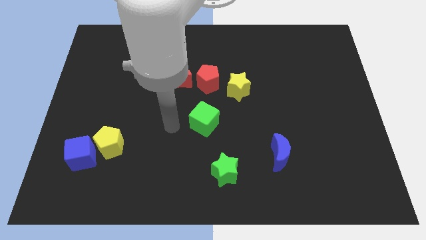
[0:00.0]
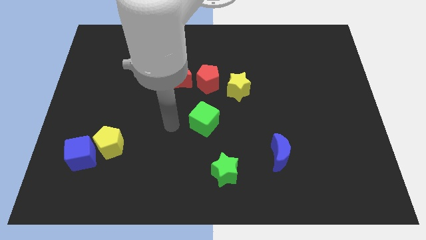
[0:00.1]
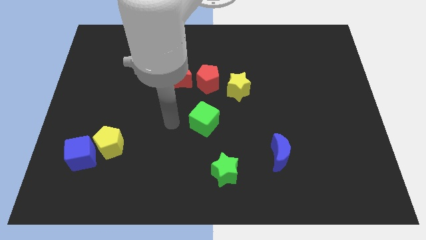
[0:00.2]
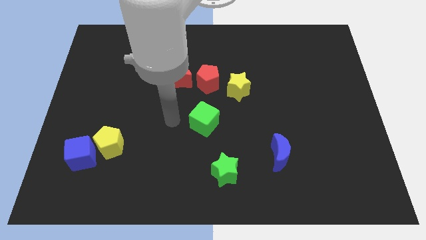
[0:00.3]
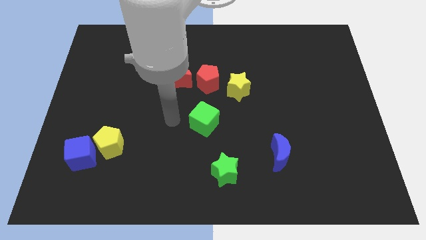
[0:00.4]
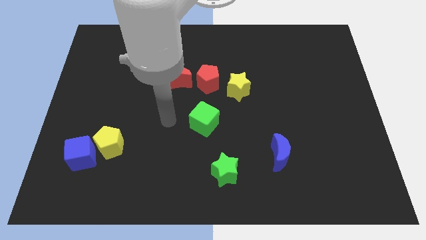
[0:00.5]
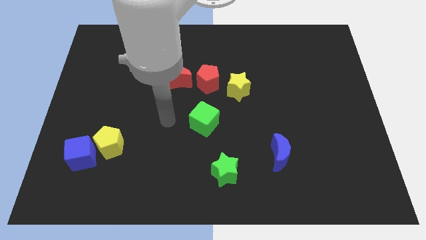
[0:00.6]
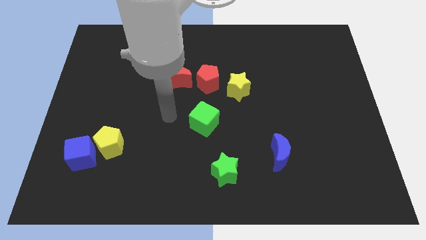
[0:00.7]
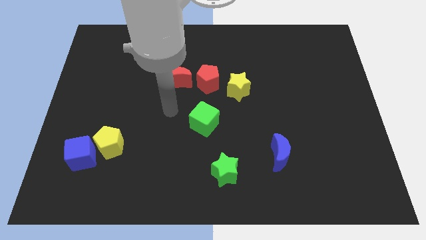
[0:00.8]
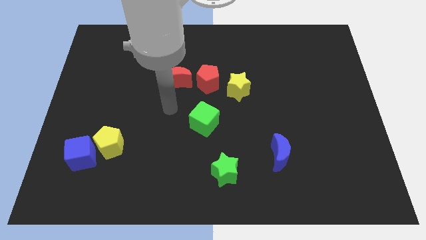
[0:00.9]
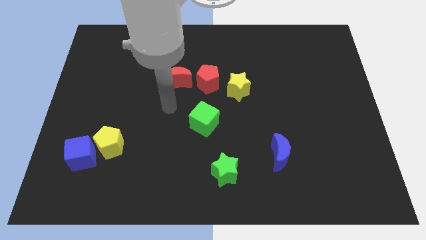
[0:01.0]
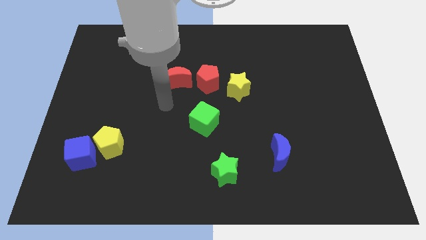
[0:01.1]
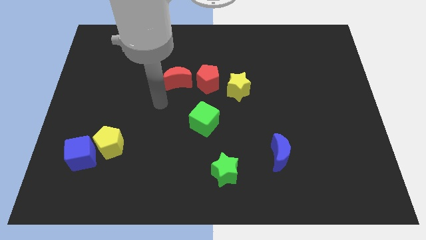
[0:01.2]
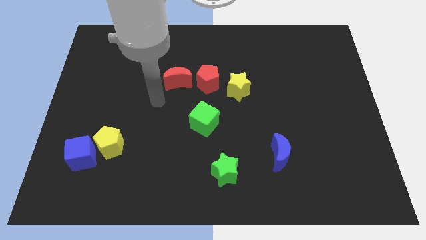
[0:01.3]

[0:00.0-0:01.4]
place your arm to the left of red moon

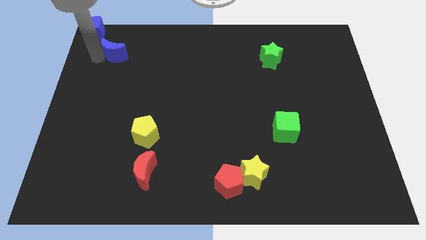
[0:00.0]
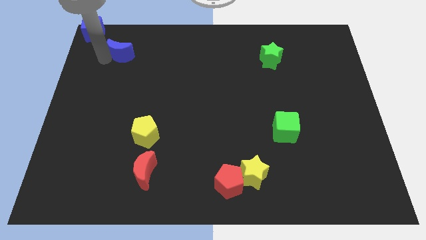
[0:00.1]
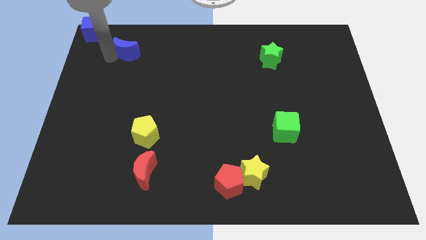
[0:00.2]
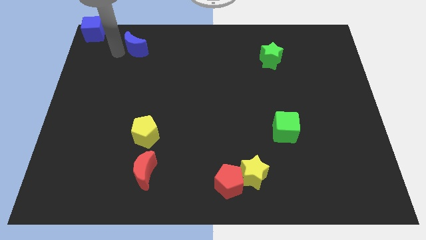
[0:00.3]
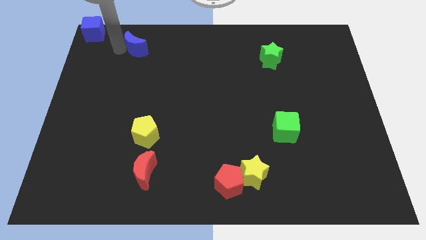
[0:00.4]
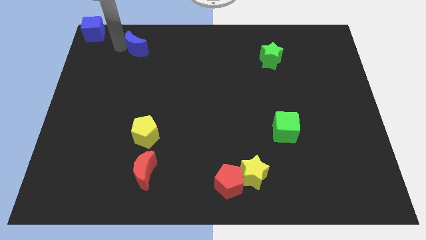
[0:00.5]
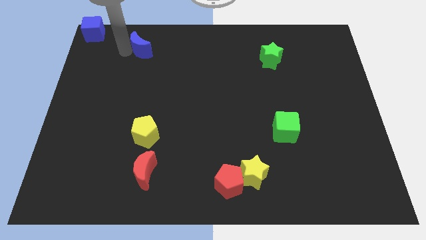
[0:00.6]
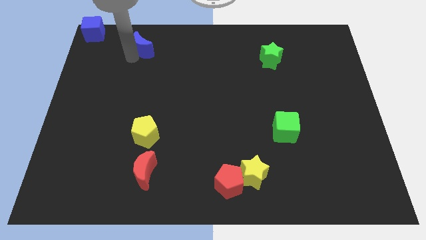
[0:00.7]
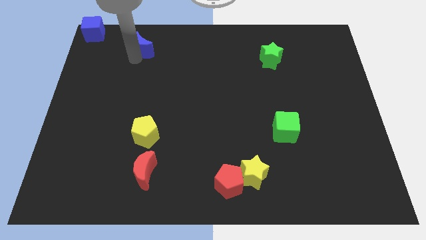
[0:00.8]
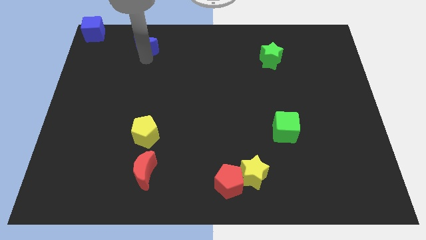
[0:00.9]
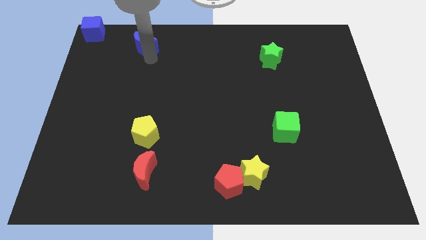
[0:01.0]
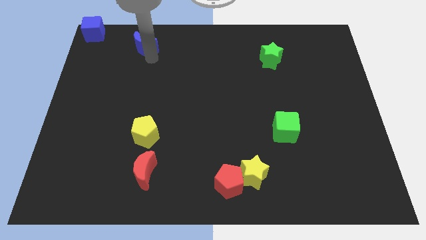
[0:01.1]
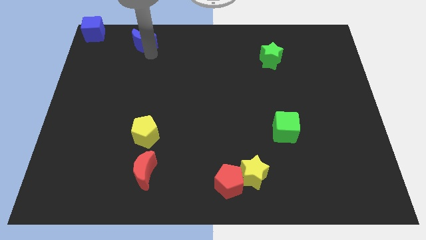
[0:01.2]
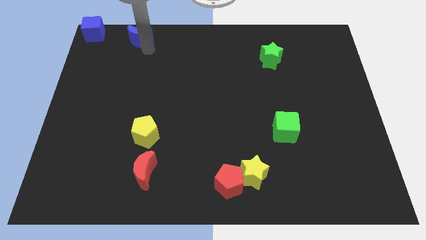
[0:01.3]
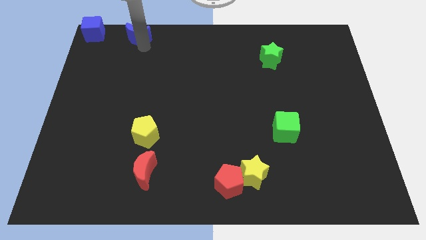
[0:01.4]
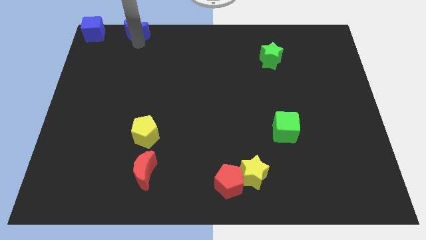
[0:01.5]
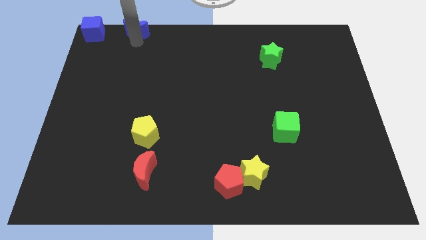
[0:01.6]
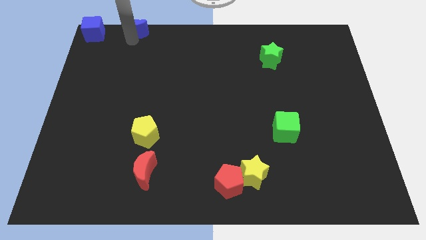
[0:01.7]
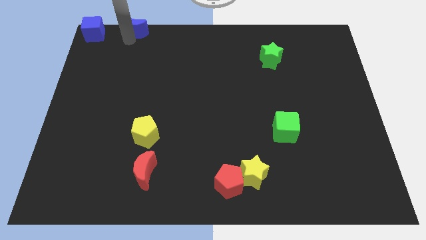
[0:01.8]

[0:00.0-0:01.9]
slide the blue moon to the right of the blue cube

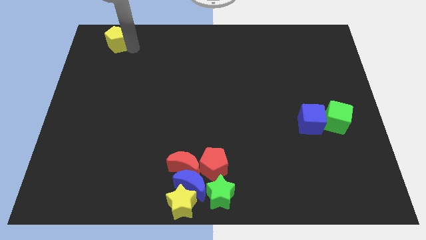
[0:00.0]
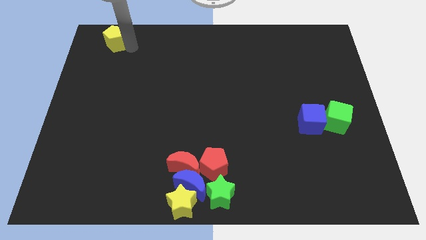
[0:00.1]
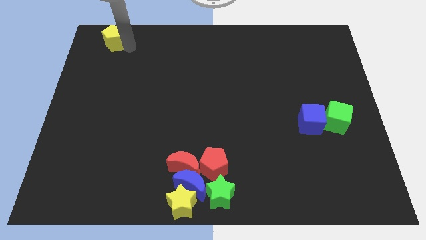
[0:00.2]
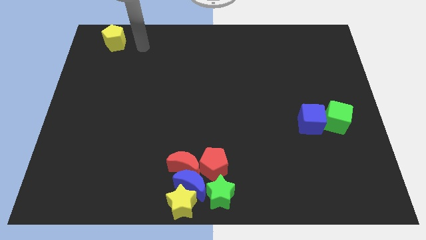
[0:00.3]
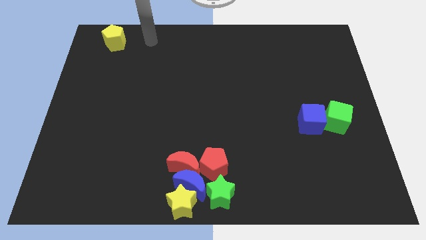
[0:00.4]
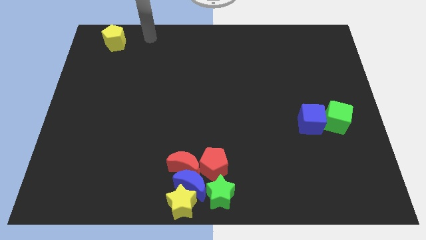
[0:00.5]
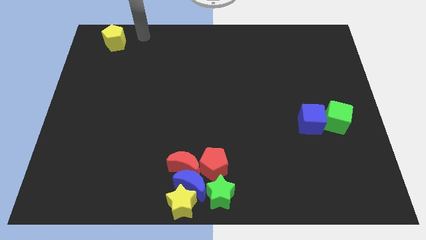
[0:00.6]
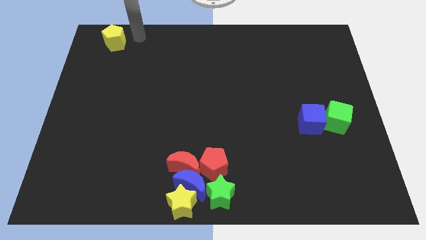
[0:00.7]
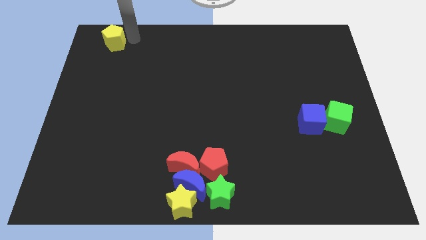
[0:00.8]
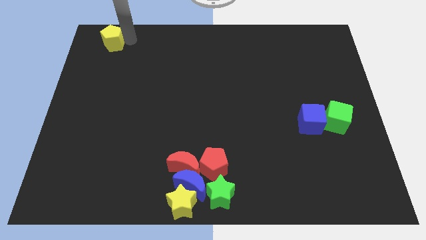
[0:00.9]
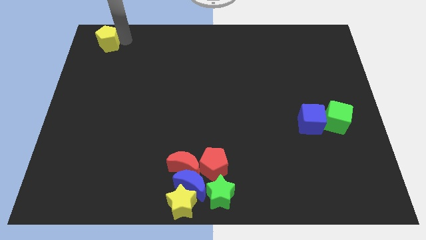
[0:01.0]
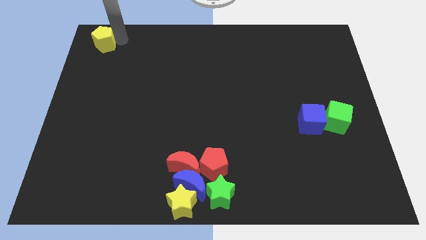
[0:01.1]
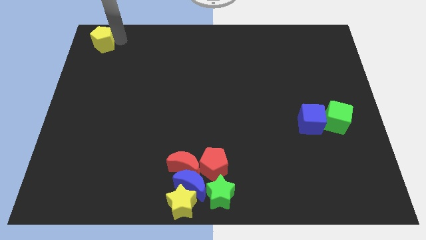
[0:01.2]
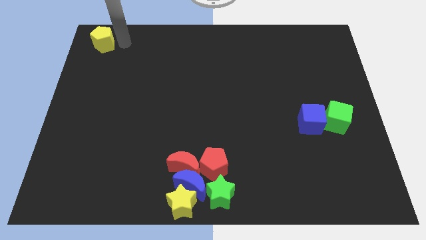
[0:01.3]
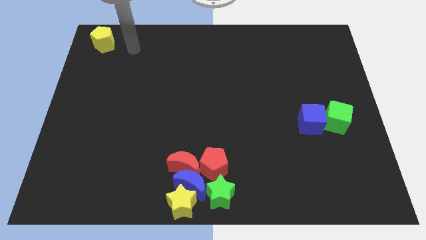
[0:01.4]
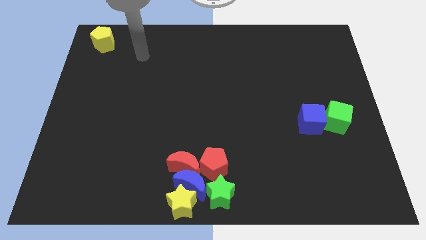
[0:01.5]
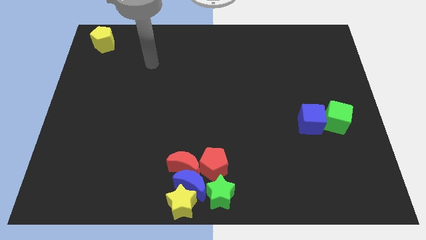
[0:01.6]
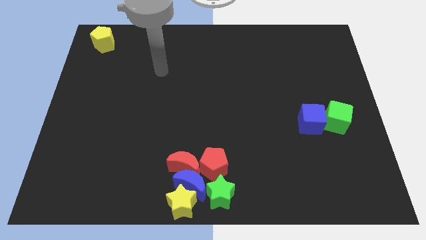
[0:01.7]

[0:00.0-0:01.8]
move the yellow pentagon to the top left corner of the board

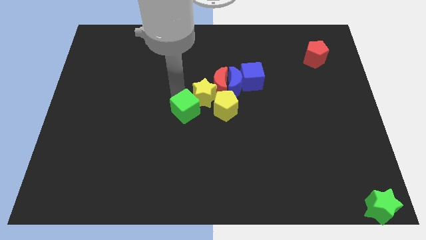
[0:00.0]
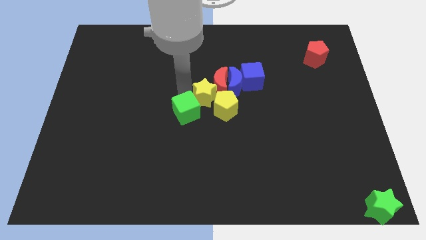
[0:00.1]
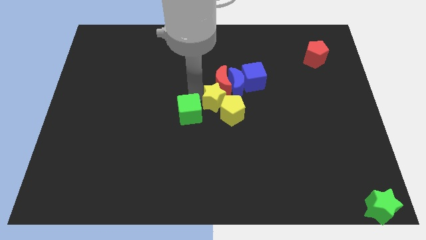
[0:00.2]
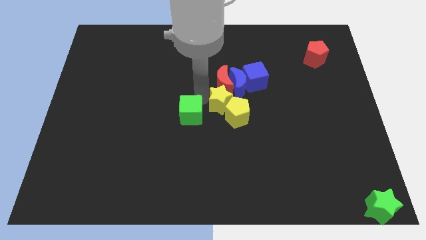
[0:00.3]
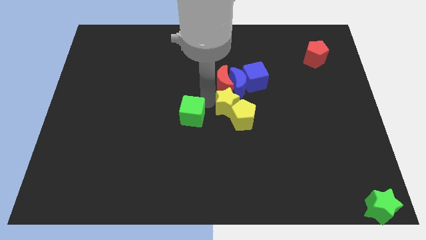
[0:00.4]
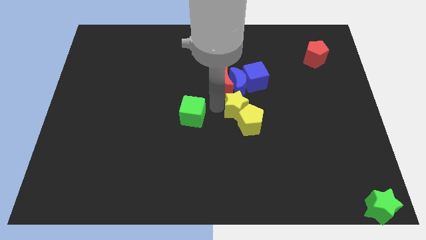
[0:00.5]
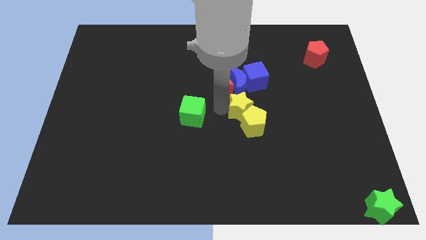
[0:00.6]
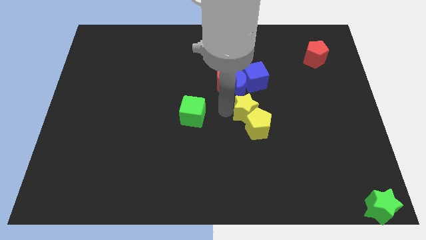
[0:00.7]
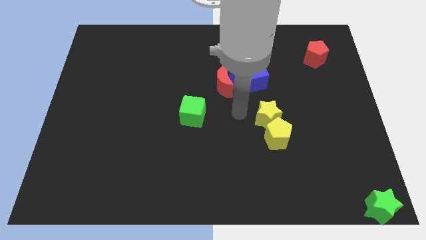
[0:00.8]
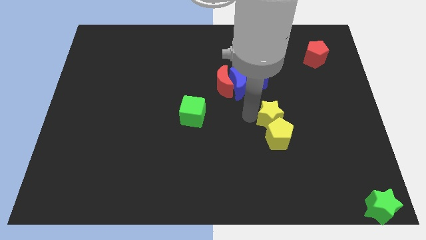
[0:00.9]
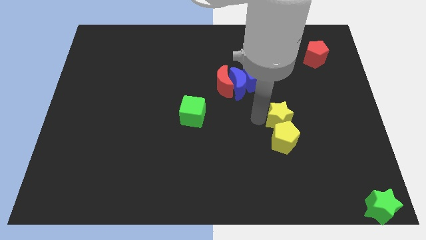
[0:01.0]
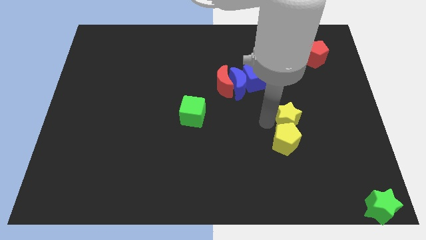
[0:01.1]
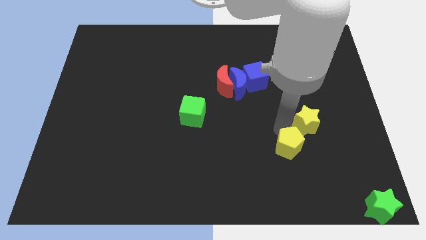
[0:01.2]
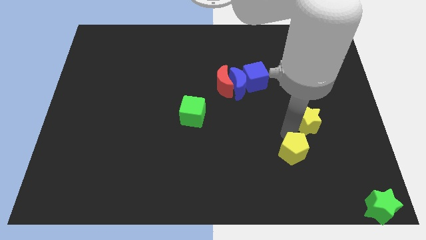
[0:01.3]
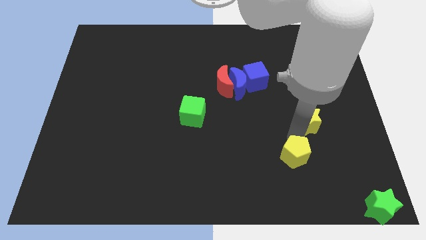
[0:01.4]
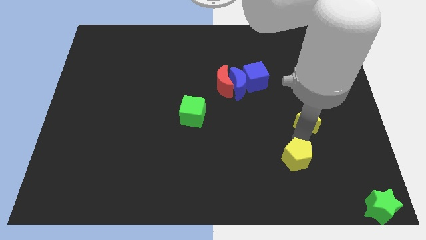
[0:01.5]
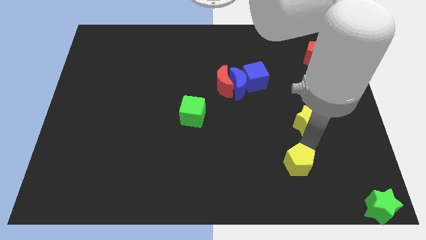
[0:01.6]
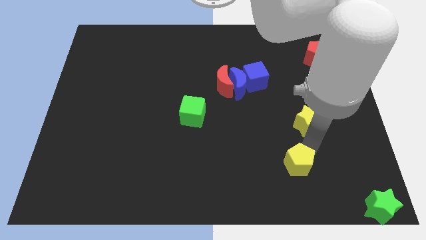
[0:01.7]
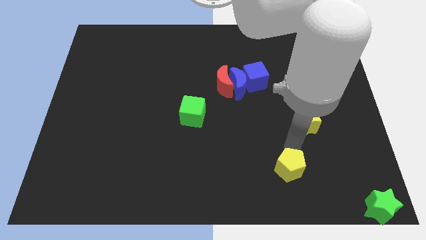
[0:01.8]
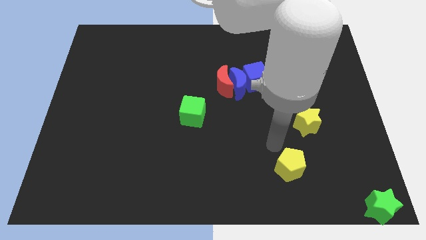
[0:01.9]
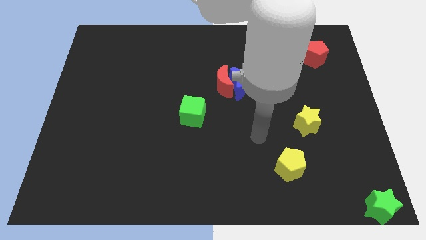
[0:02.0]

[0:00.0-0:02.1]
separate the group of yellow blocks

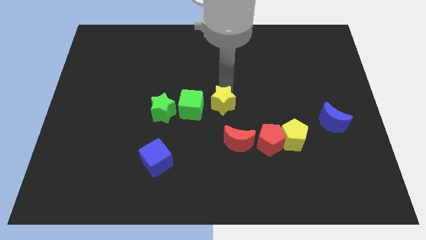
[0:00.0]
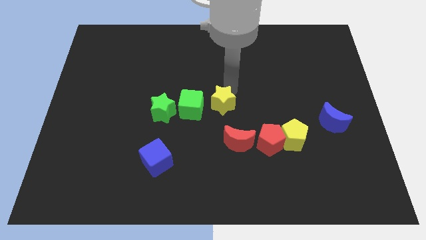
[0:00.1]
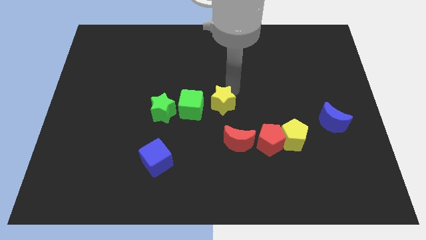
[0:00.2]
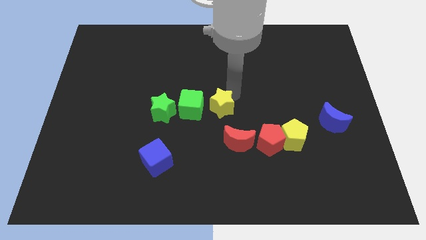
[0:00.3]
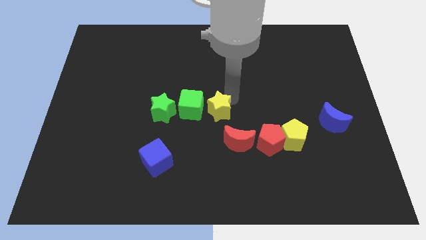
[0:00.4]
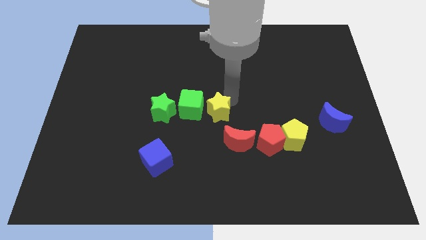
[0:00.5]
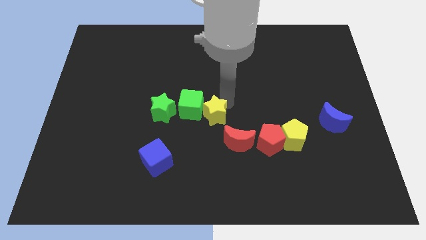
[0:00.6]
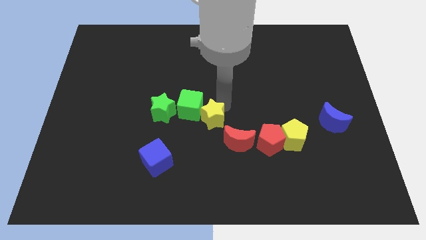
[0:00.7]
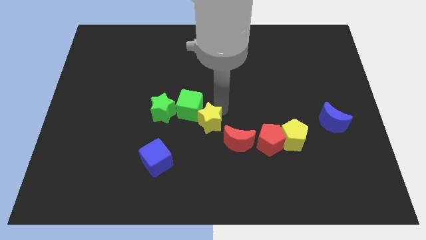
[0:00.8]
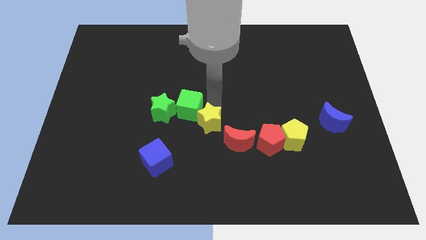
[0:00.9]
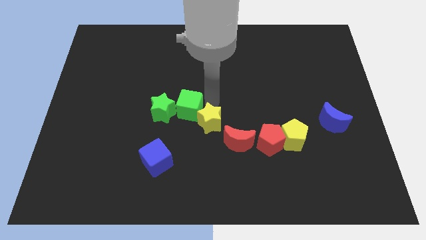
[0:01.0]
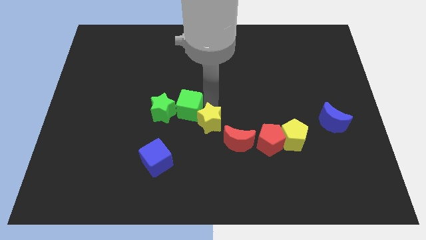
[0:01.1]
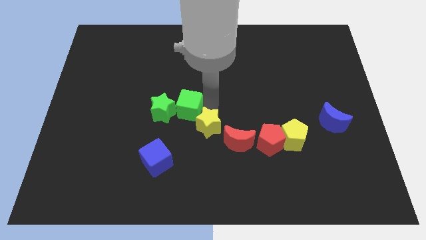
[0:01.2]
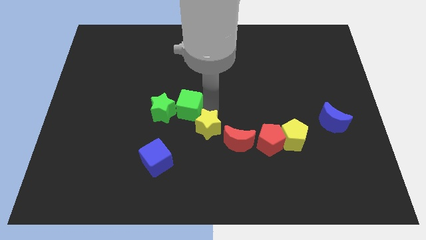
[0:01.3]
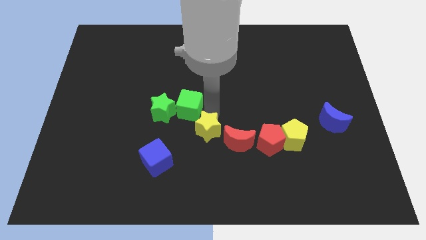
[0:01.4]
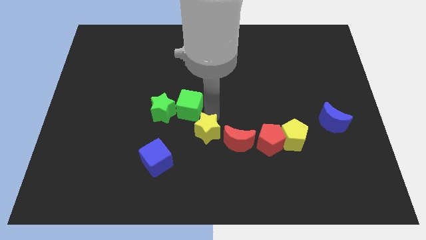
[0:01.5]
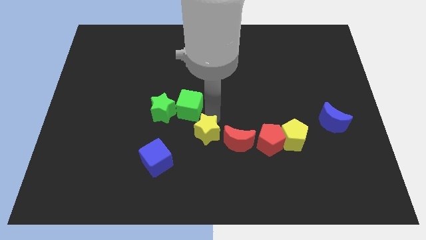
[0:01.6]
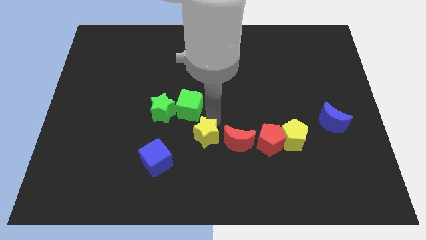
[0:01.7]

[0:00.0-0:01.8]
move the yellow star towards the left side of the red crescent
